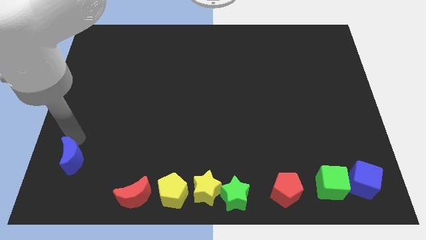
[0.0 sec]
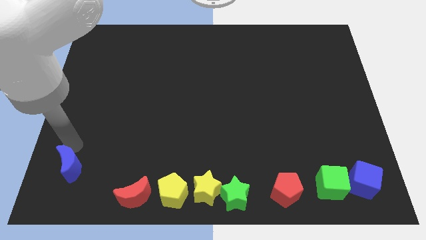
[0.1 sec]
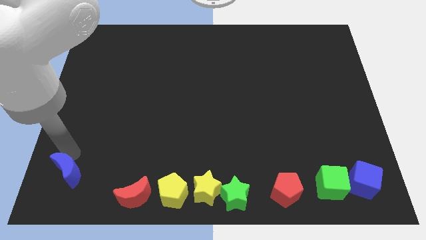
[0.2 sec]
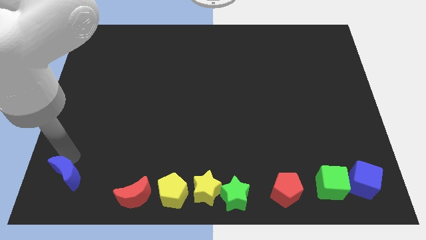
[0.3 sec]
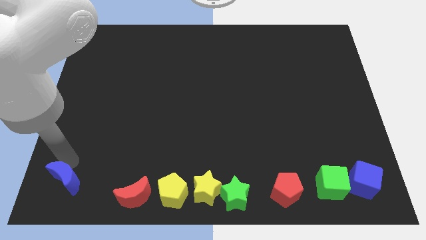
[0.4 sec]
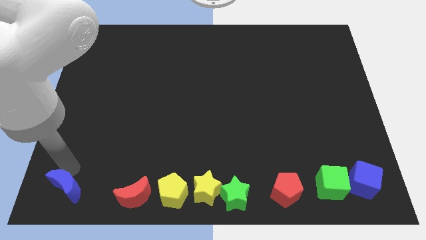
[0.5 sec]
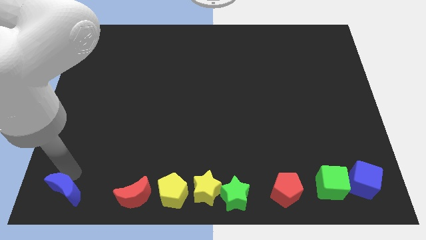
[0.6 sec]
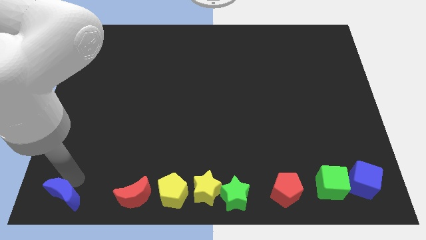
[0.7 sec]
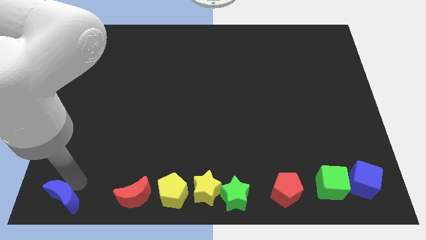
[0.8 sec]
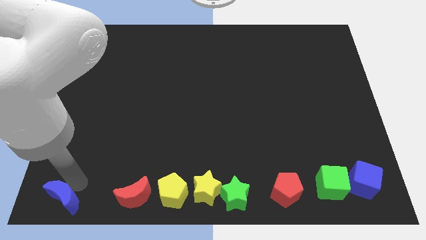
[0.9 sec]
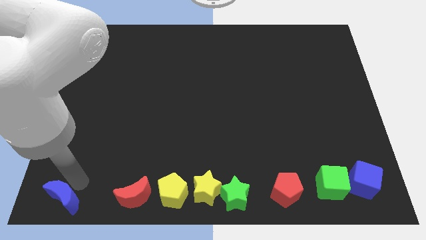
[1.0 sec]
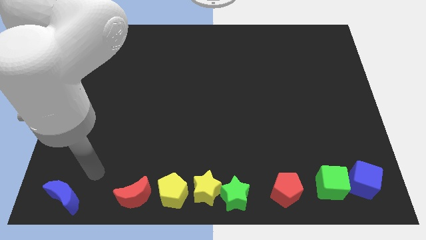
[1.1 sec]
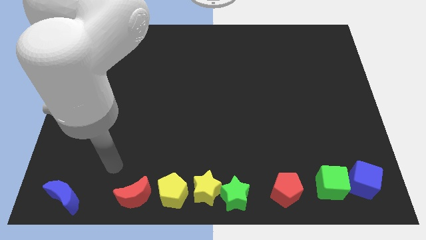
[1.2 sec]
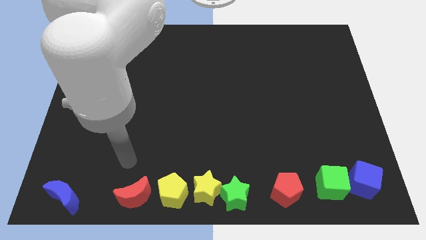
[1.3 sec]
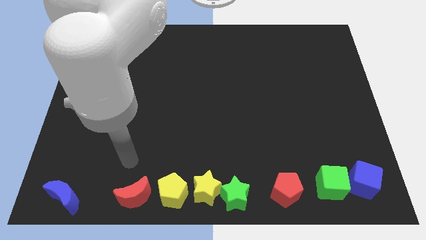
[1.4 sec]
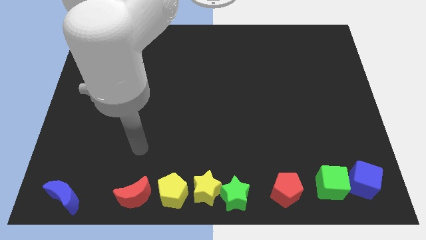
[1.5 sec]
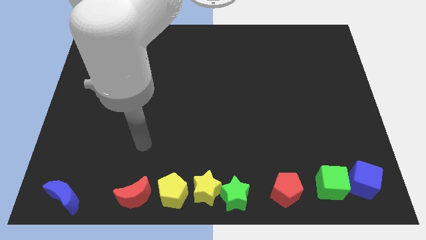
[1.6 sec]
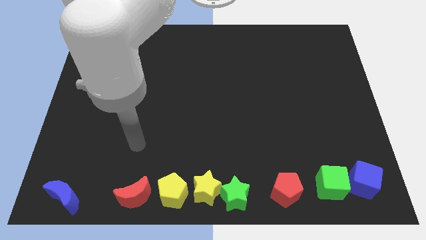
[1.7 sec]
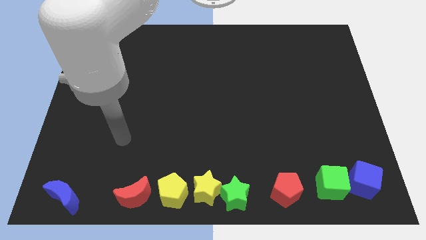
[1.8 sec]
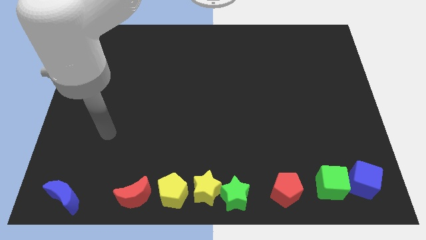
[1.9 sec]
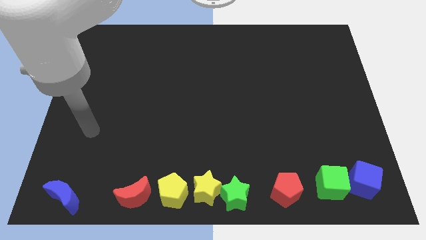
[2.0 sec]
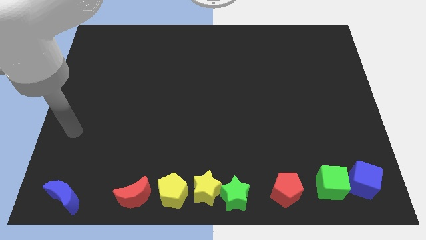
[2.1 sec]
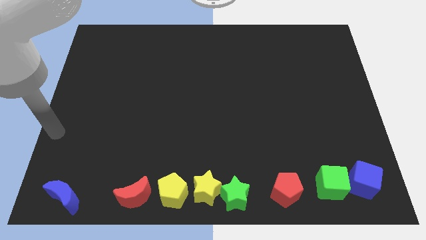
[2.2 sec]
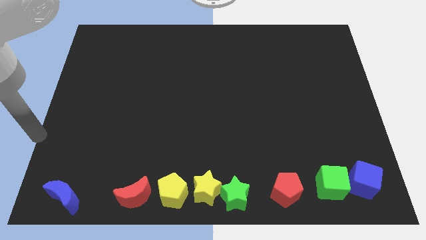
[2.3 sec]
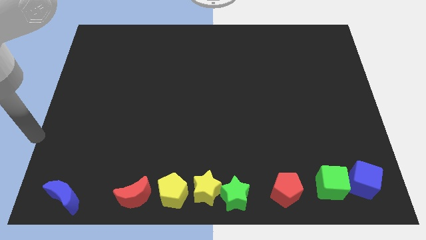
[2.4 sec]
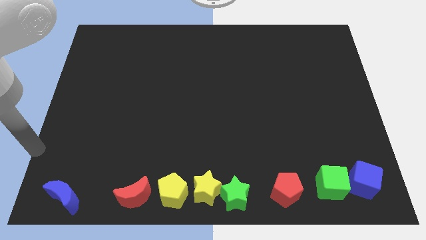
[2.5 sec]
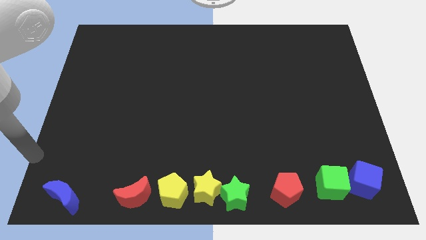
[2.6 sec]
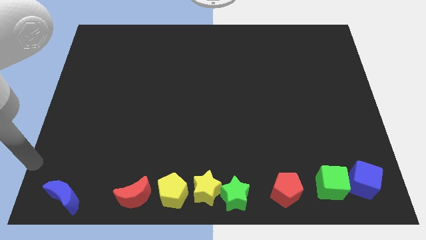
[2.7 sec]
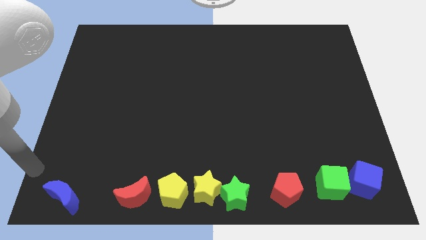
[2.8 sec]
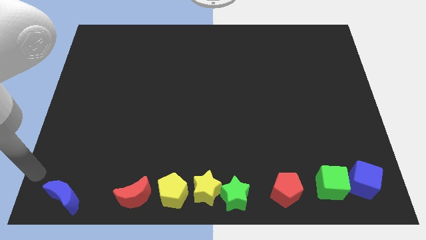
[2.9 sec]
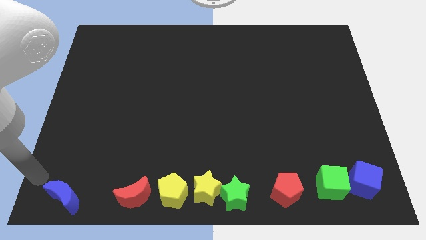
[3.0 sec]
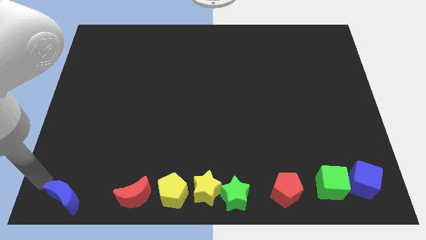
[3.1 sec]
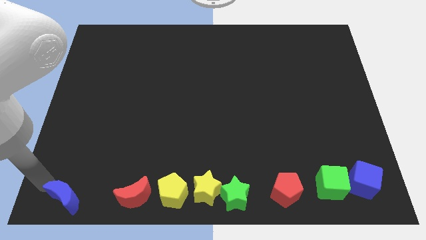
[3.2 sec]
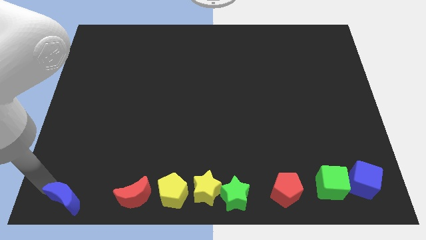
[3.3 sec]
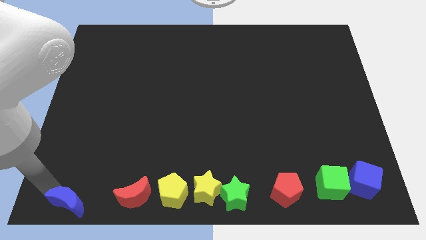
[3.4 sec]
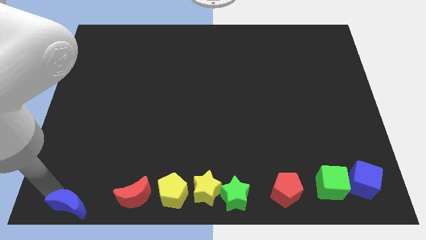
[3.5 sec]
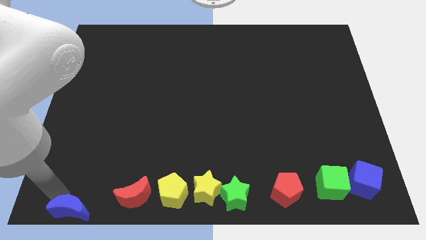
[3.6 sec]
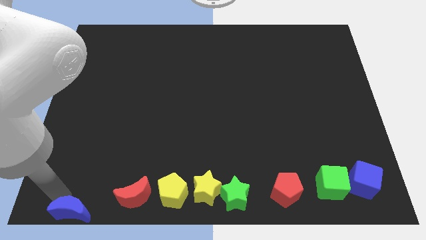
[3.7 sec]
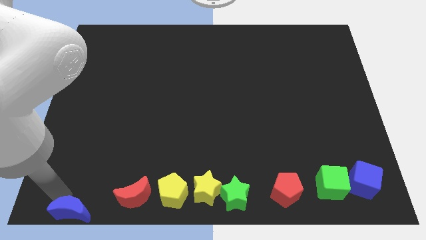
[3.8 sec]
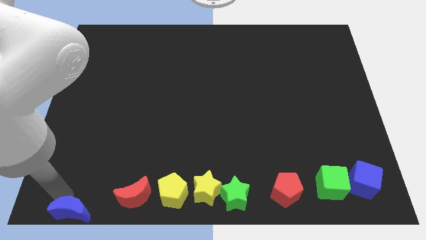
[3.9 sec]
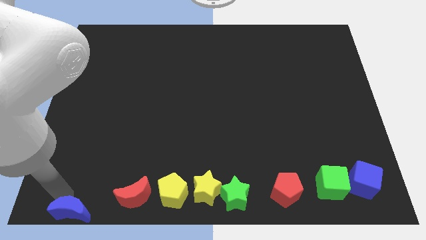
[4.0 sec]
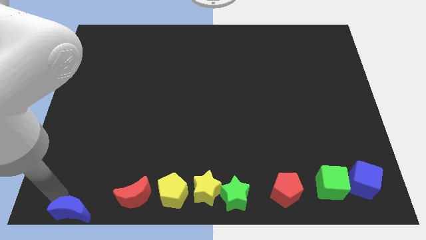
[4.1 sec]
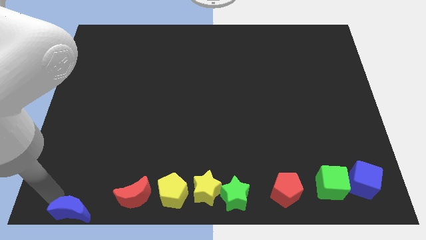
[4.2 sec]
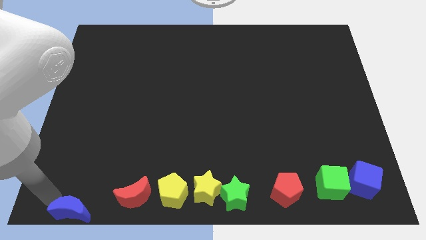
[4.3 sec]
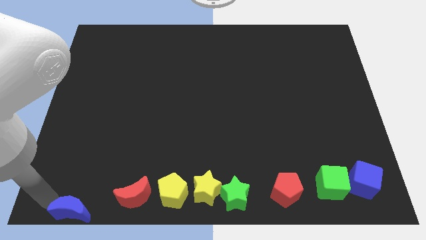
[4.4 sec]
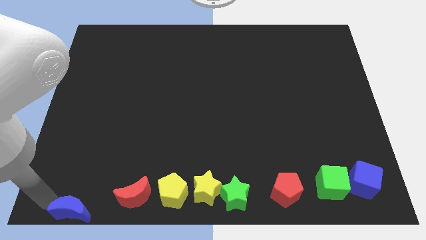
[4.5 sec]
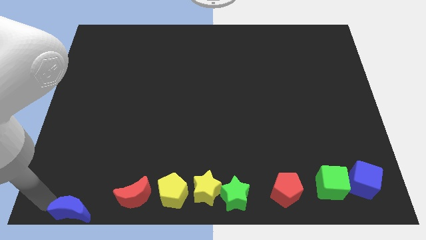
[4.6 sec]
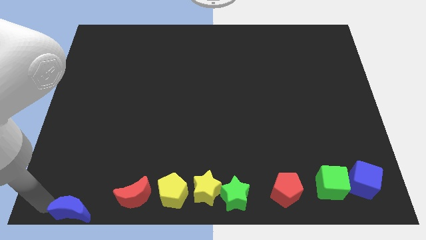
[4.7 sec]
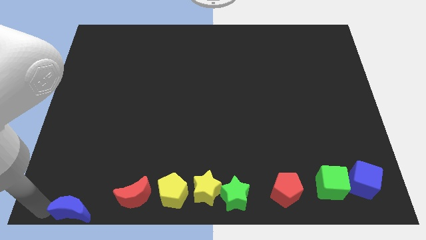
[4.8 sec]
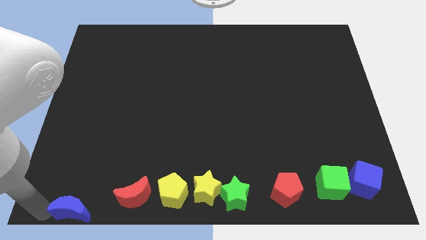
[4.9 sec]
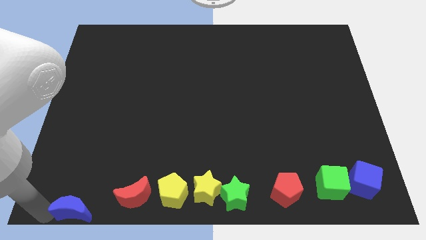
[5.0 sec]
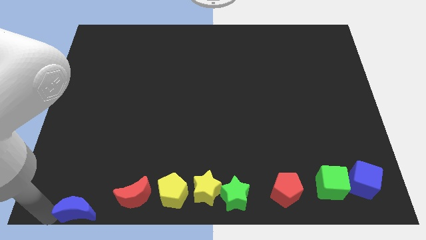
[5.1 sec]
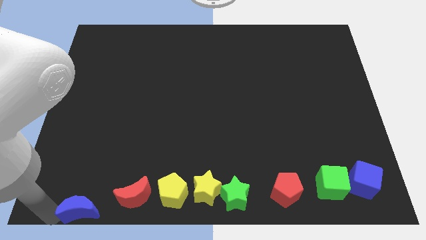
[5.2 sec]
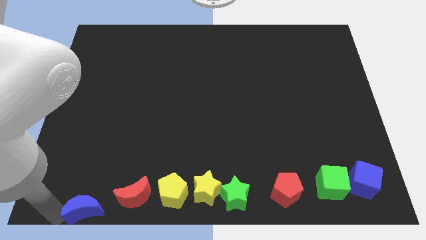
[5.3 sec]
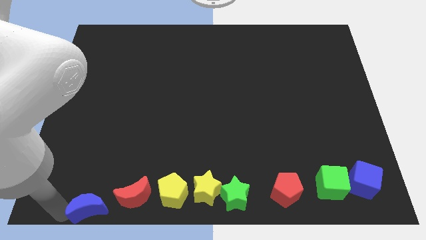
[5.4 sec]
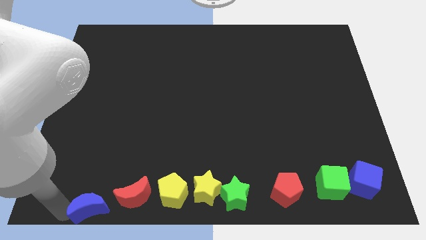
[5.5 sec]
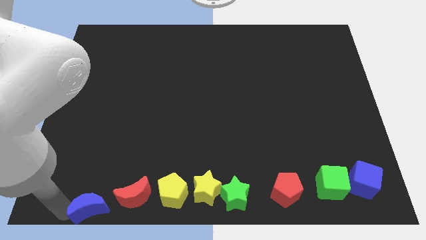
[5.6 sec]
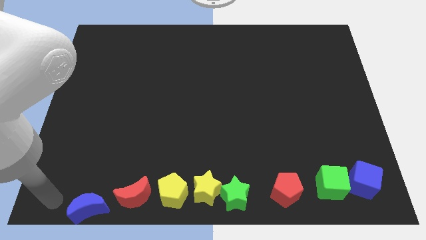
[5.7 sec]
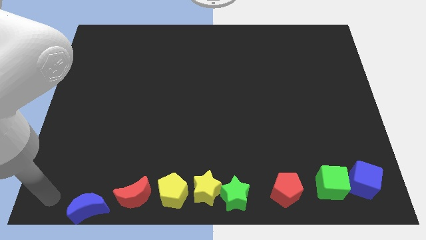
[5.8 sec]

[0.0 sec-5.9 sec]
put the blue crescent to the left of red moon to form a horizontal line of all blocks

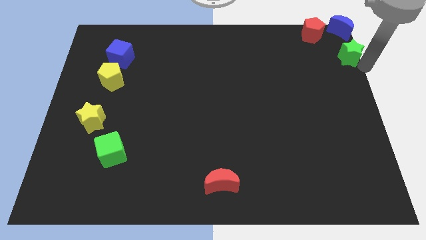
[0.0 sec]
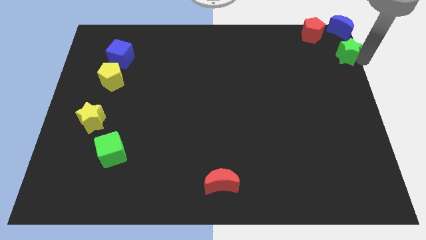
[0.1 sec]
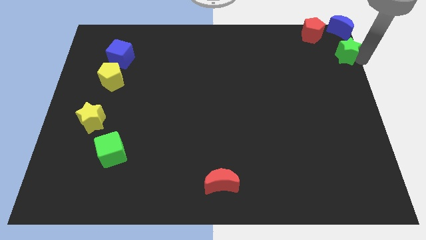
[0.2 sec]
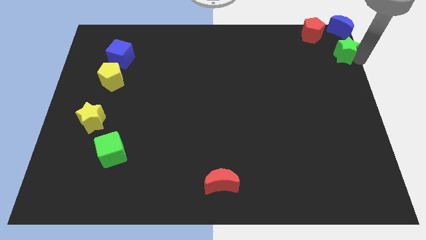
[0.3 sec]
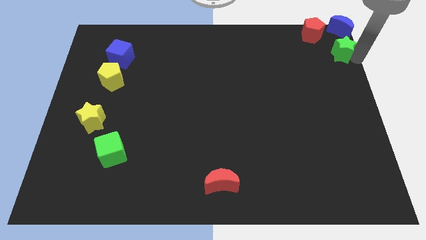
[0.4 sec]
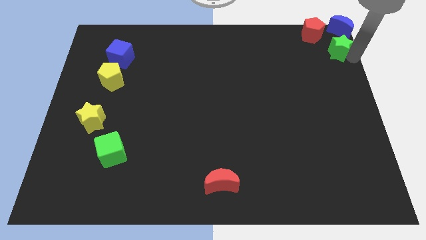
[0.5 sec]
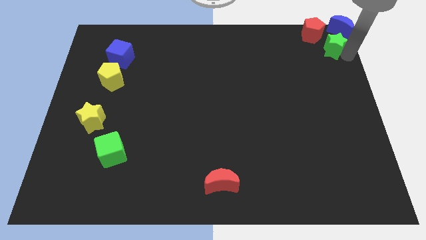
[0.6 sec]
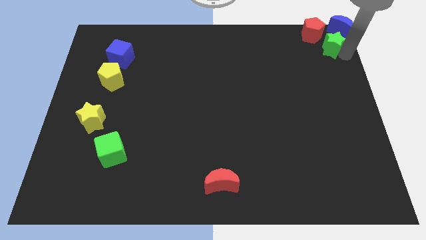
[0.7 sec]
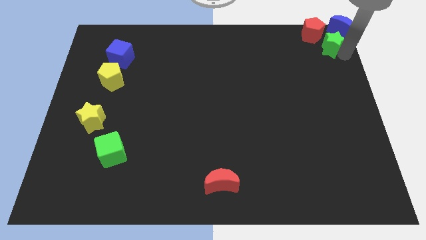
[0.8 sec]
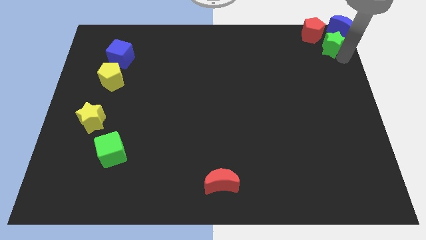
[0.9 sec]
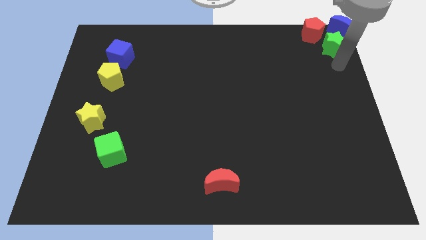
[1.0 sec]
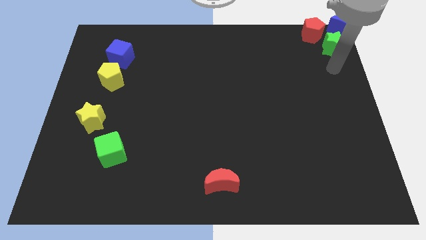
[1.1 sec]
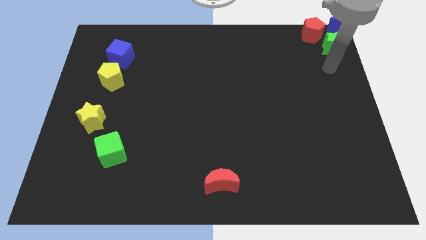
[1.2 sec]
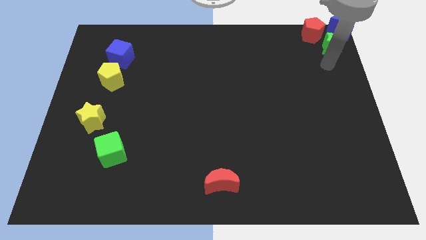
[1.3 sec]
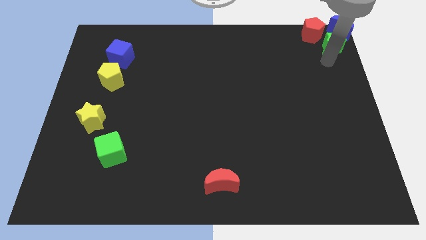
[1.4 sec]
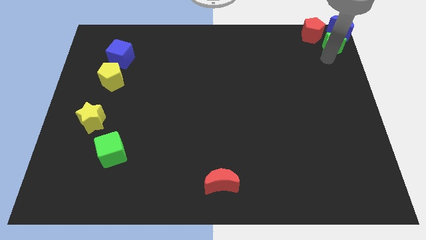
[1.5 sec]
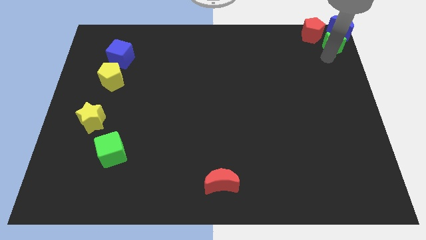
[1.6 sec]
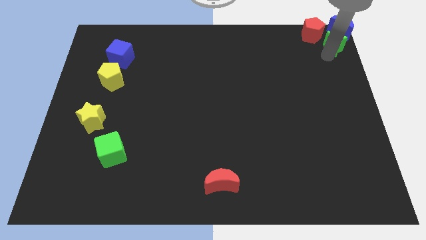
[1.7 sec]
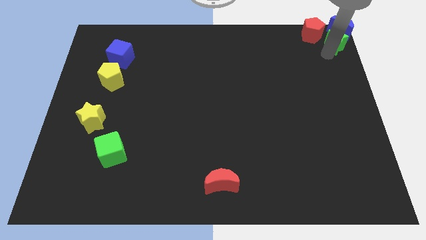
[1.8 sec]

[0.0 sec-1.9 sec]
push green star into the blue moon

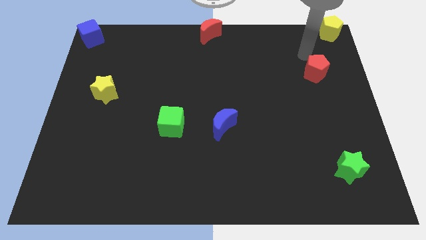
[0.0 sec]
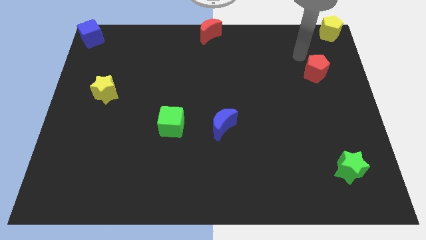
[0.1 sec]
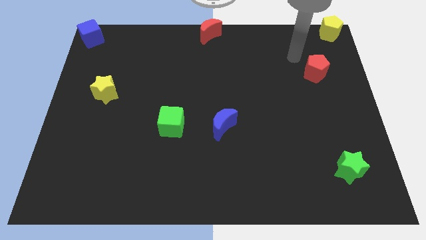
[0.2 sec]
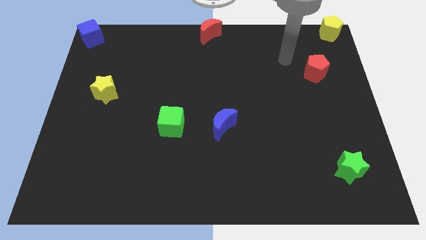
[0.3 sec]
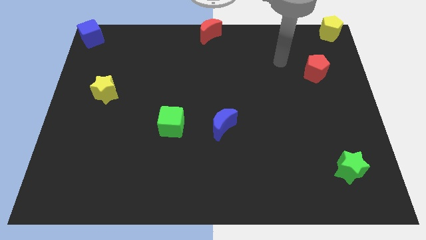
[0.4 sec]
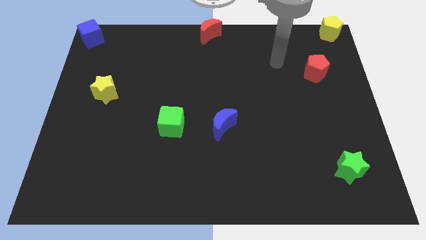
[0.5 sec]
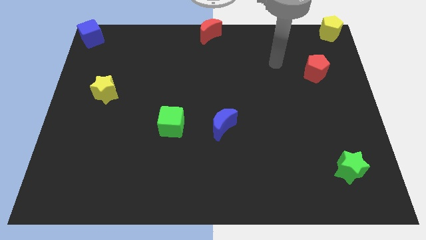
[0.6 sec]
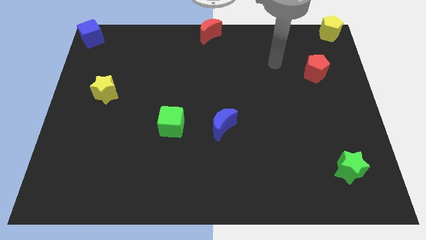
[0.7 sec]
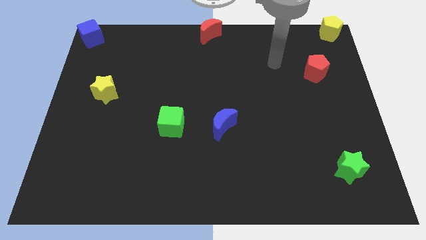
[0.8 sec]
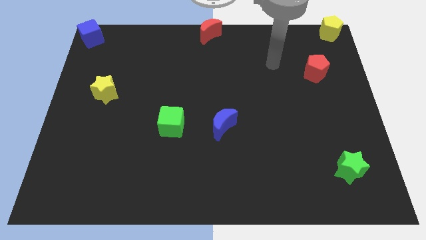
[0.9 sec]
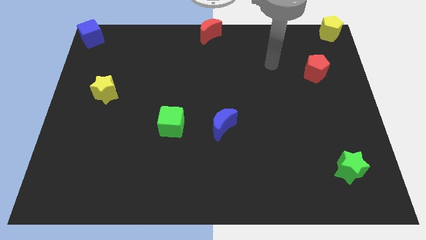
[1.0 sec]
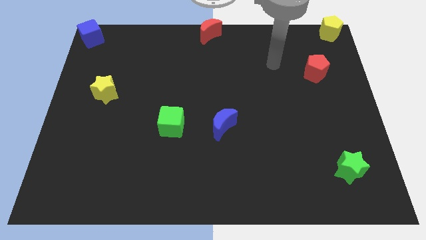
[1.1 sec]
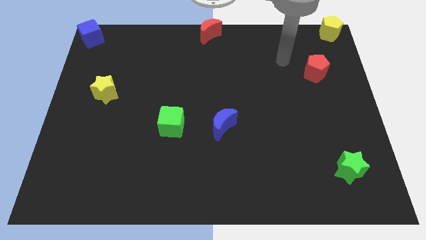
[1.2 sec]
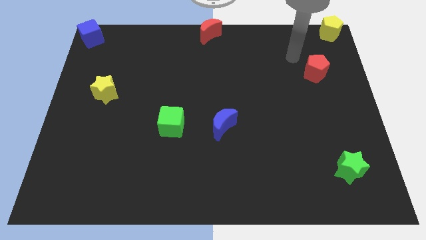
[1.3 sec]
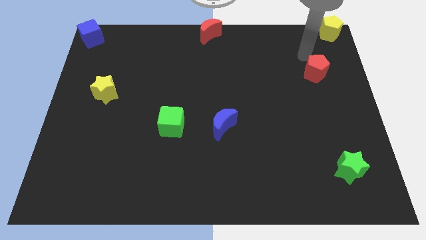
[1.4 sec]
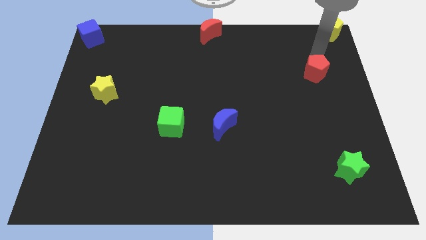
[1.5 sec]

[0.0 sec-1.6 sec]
point your arm above the red pentagon
